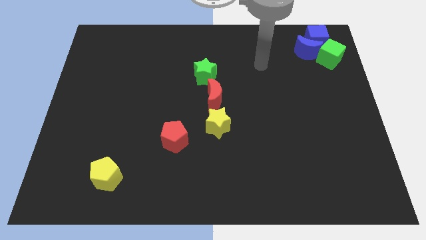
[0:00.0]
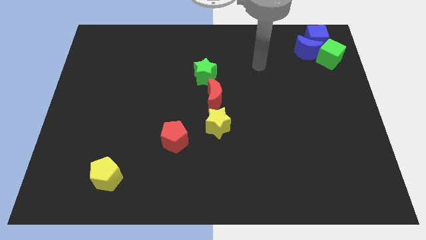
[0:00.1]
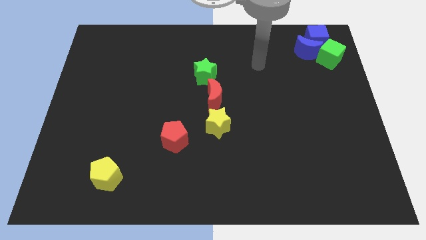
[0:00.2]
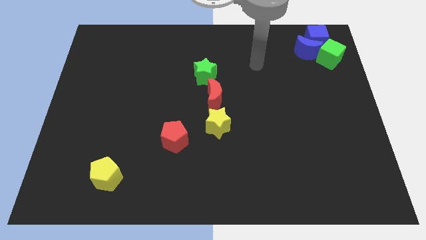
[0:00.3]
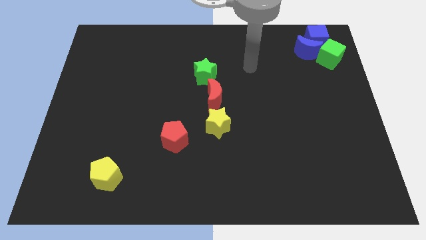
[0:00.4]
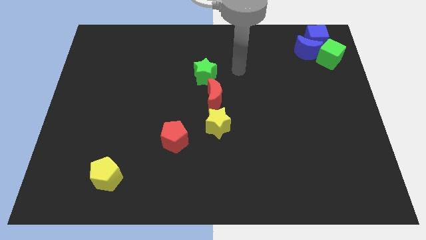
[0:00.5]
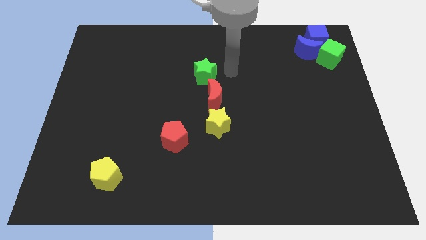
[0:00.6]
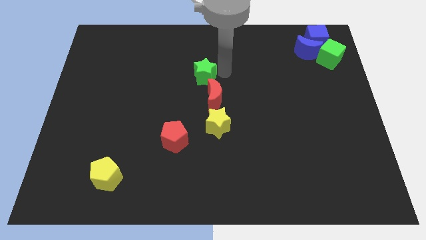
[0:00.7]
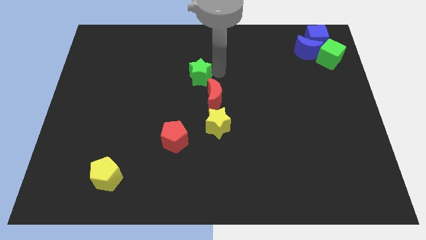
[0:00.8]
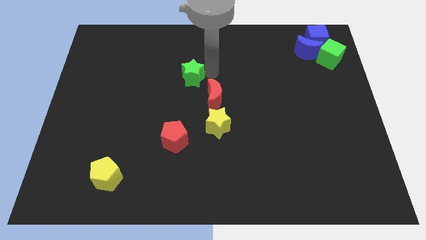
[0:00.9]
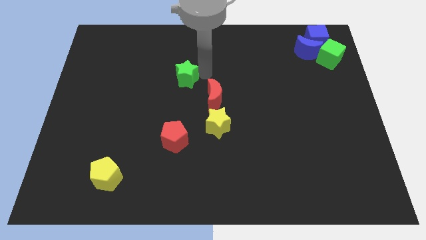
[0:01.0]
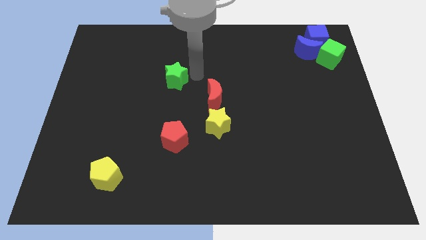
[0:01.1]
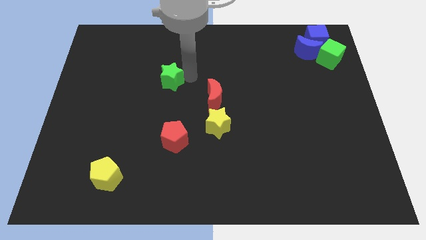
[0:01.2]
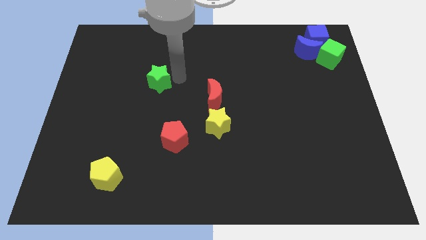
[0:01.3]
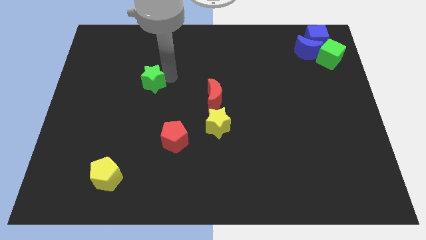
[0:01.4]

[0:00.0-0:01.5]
move the green star slightly to the left

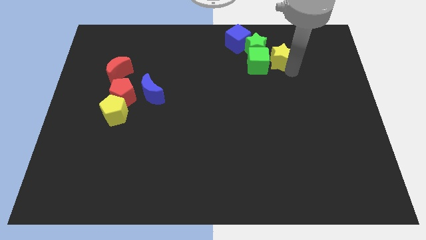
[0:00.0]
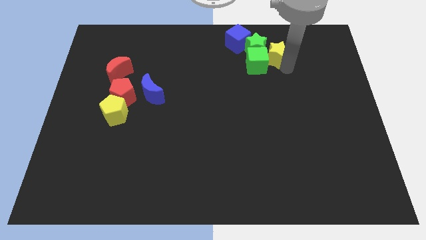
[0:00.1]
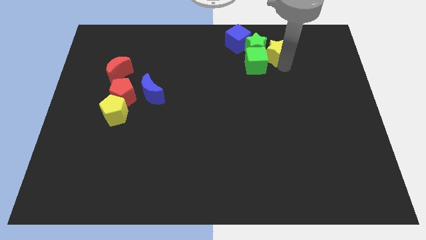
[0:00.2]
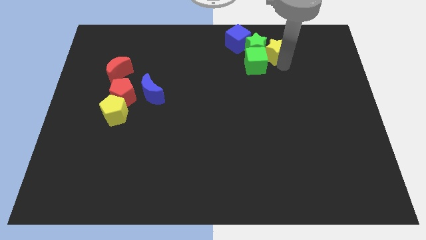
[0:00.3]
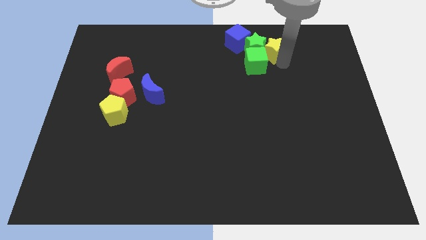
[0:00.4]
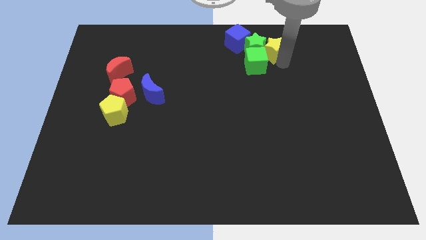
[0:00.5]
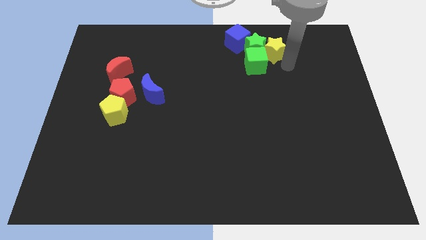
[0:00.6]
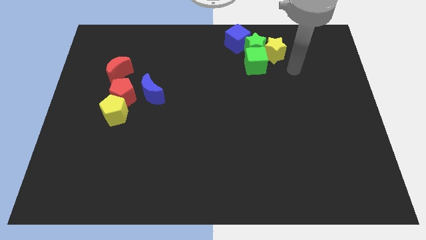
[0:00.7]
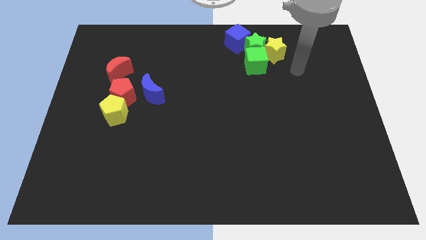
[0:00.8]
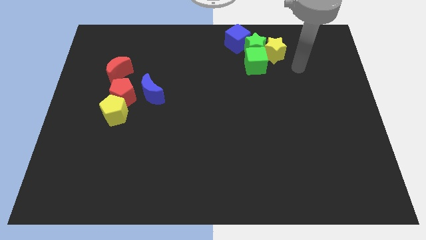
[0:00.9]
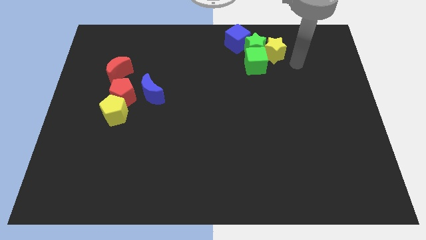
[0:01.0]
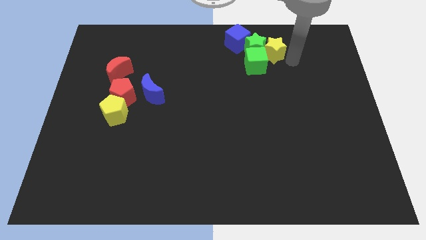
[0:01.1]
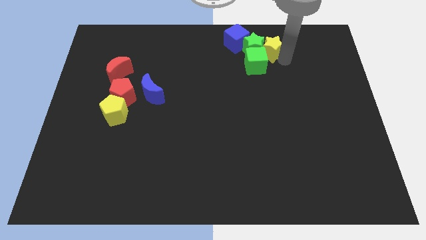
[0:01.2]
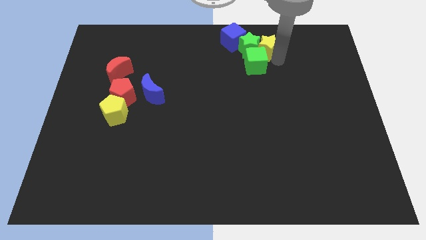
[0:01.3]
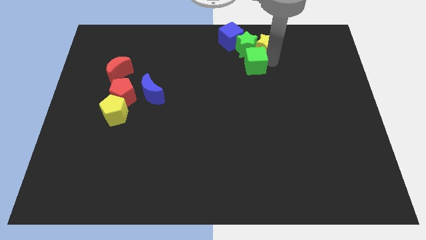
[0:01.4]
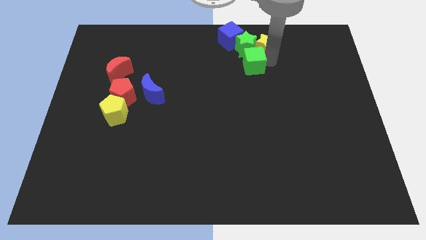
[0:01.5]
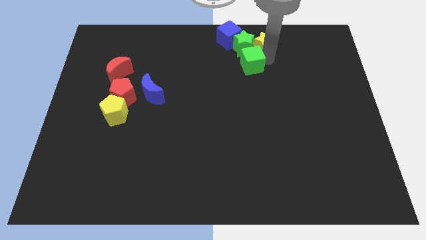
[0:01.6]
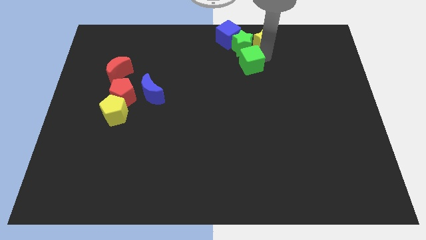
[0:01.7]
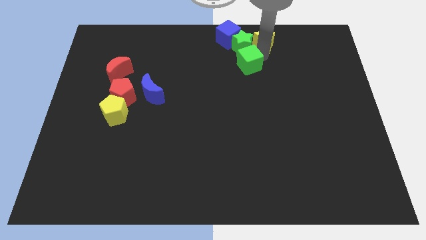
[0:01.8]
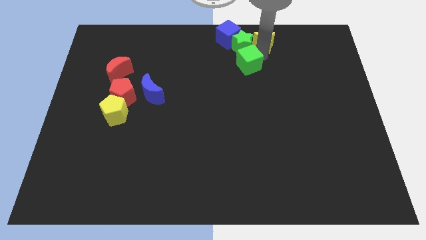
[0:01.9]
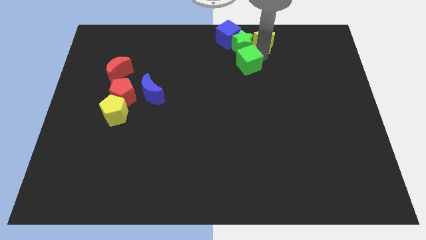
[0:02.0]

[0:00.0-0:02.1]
place the yellow star close to the green star

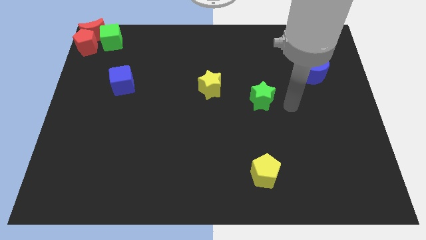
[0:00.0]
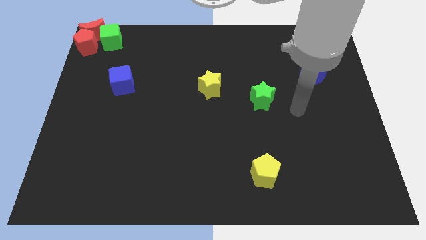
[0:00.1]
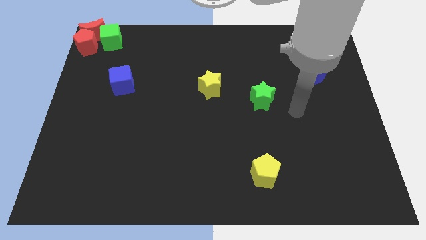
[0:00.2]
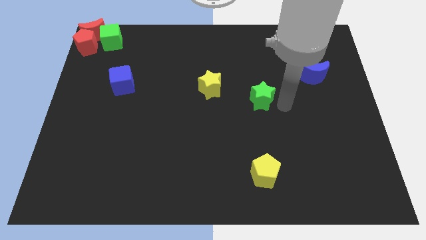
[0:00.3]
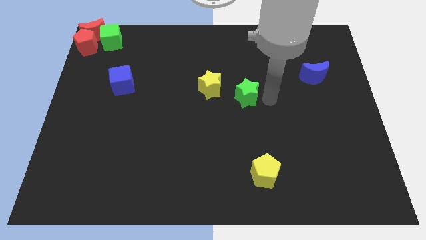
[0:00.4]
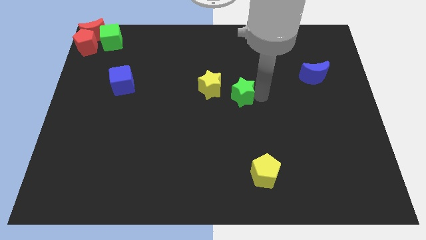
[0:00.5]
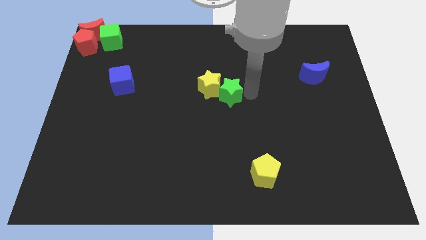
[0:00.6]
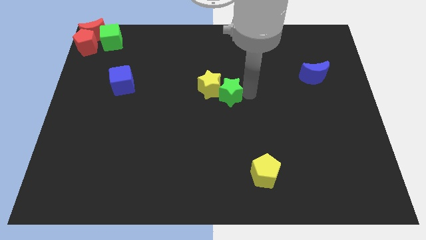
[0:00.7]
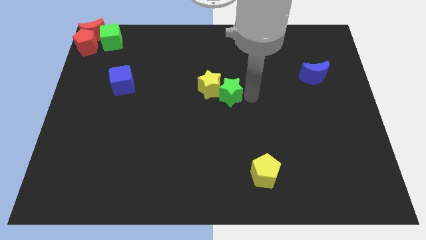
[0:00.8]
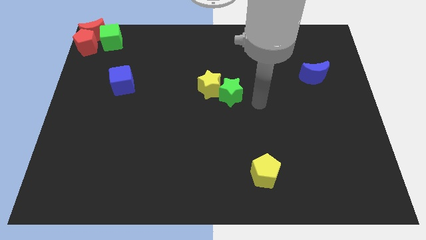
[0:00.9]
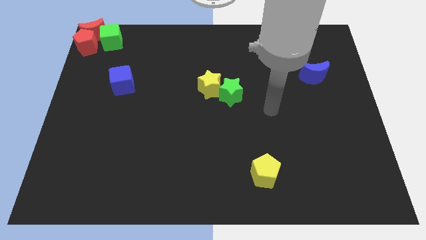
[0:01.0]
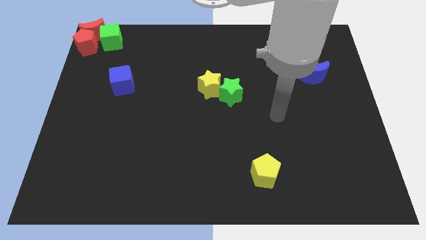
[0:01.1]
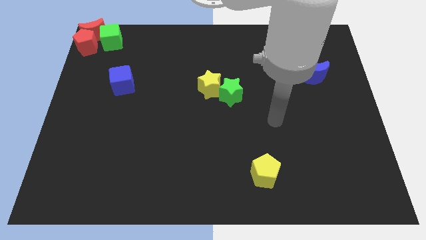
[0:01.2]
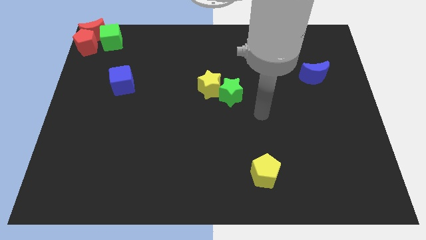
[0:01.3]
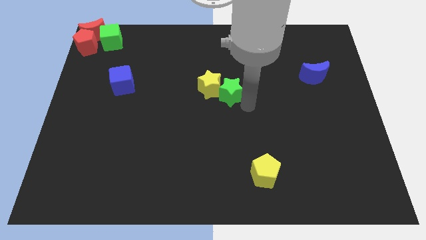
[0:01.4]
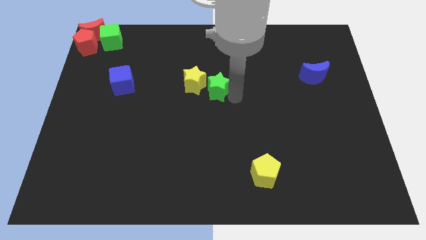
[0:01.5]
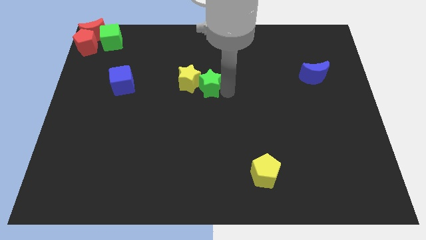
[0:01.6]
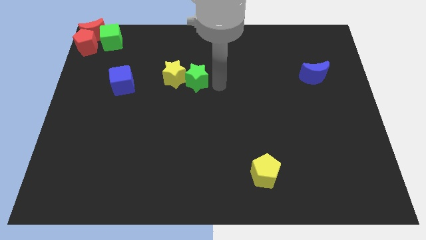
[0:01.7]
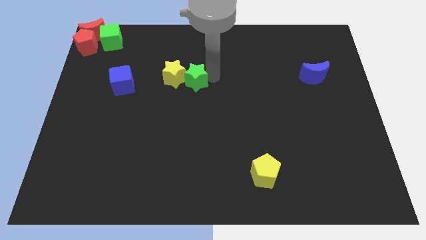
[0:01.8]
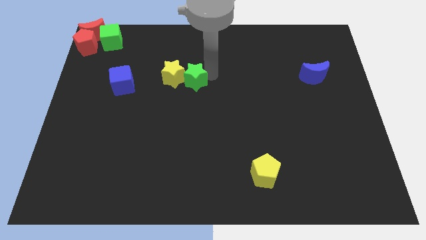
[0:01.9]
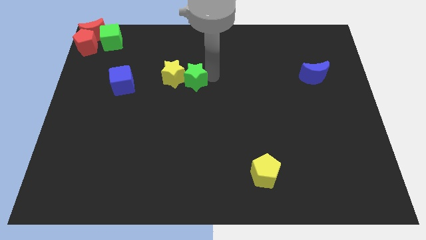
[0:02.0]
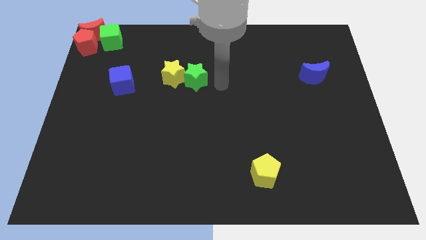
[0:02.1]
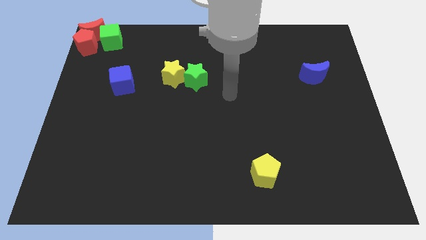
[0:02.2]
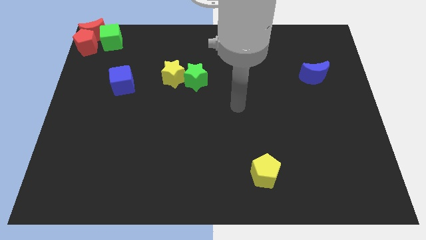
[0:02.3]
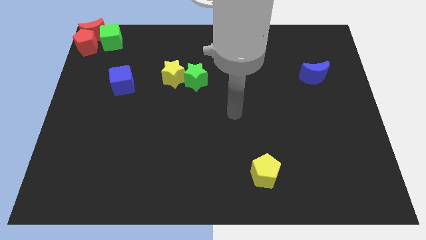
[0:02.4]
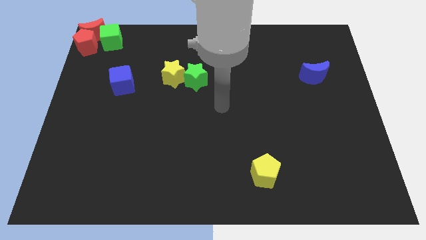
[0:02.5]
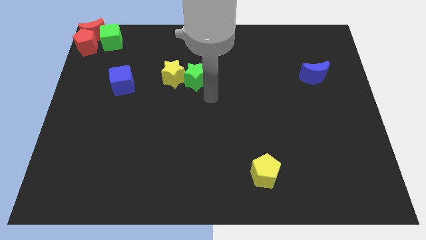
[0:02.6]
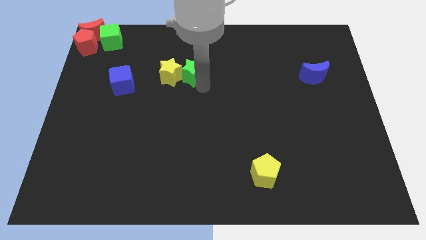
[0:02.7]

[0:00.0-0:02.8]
push green star into yellow star

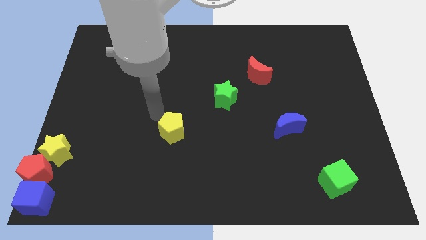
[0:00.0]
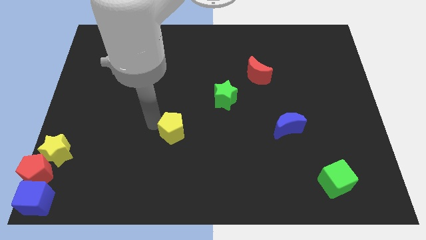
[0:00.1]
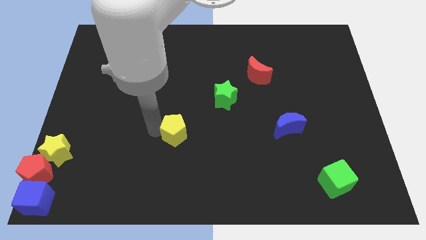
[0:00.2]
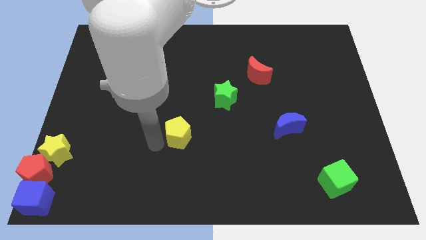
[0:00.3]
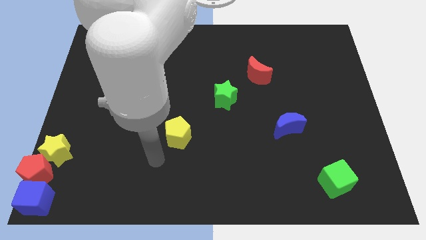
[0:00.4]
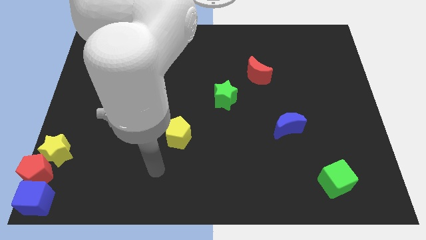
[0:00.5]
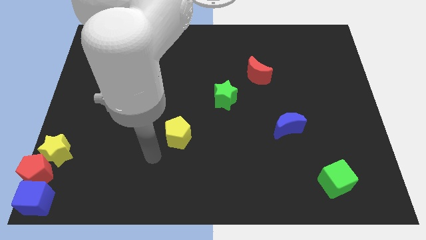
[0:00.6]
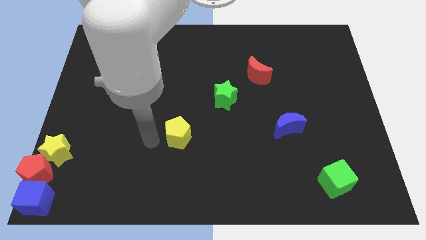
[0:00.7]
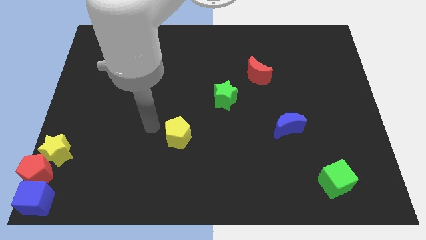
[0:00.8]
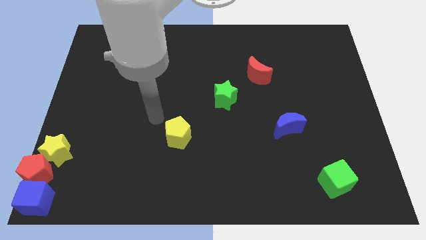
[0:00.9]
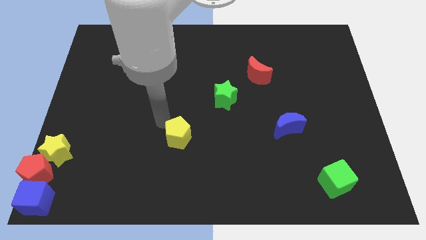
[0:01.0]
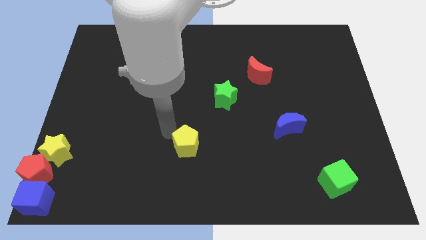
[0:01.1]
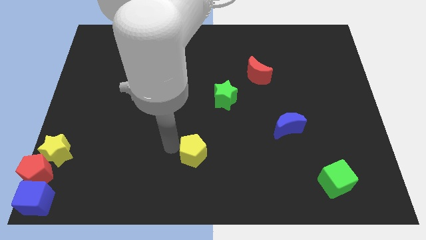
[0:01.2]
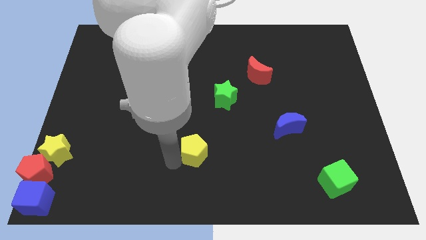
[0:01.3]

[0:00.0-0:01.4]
move the yellow pentagon towards the bottom center of the board

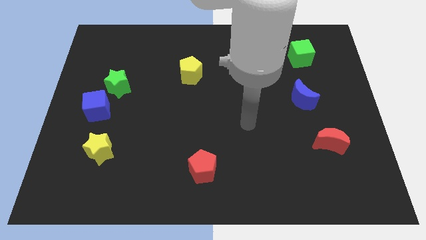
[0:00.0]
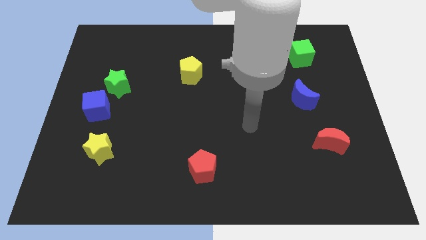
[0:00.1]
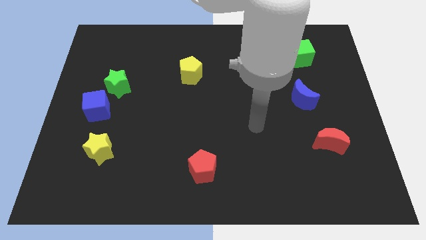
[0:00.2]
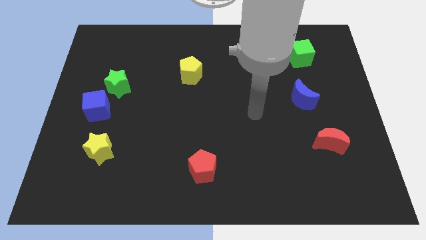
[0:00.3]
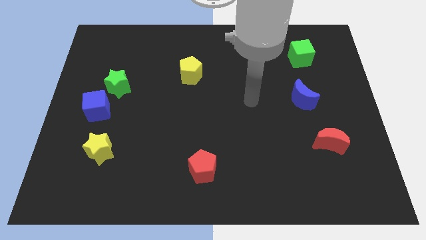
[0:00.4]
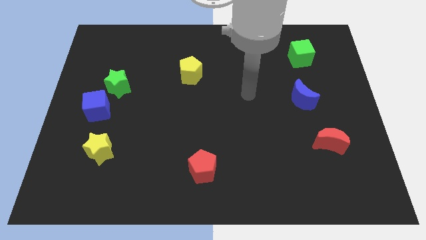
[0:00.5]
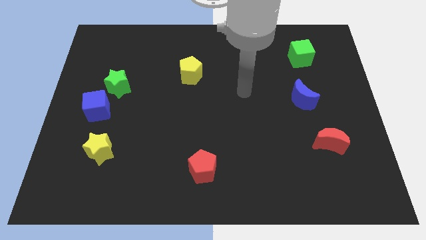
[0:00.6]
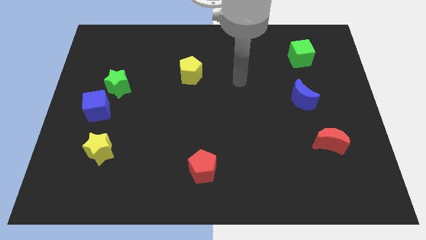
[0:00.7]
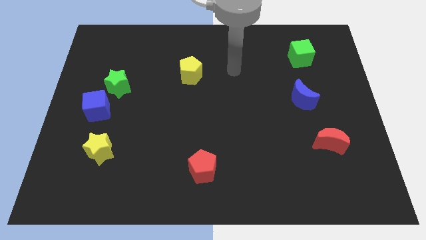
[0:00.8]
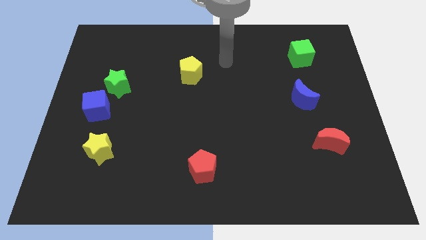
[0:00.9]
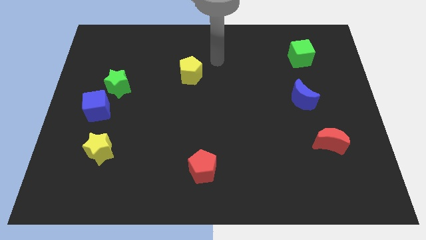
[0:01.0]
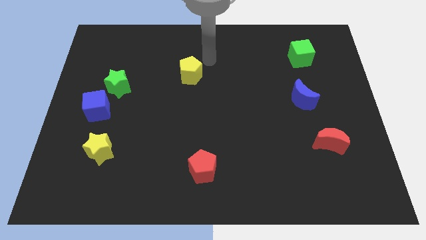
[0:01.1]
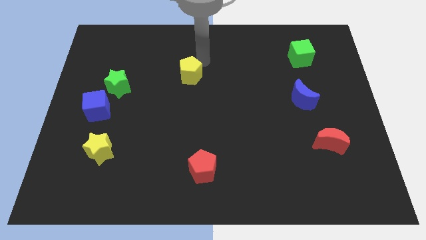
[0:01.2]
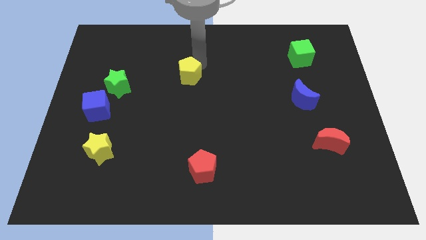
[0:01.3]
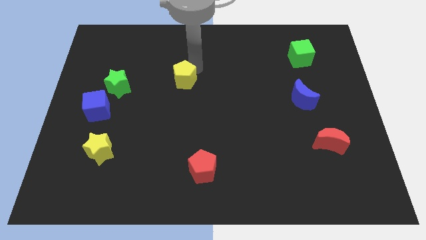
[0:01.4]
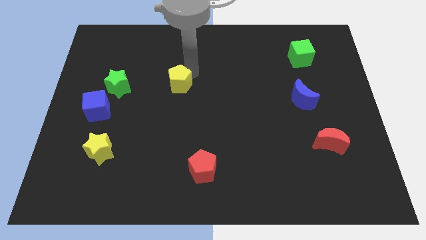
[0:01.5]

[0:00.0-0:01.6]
tap the top right of the yellow pentagon
